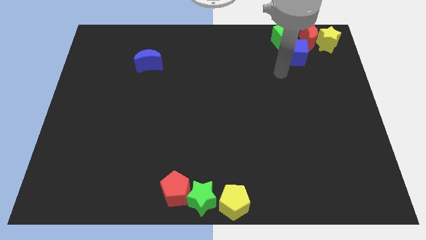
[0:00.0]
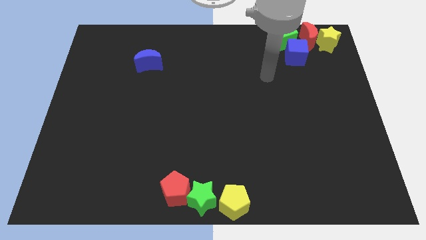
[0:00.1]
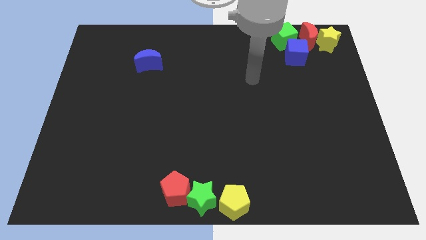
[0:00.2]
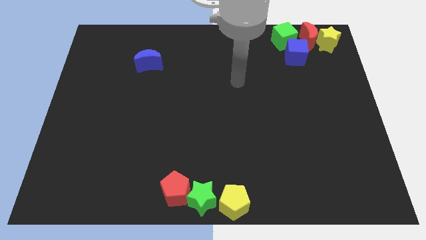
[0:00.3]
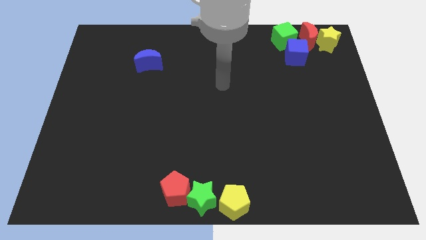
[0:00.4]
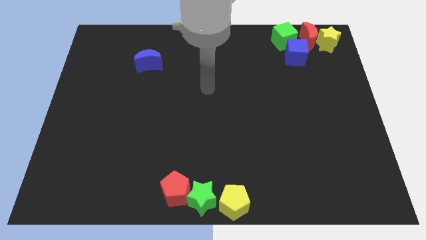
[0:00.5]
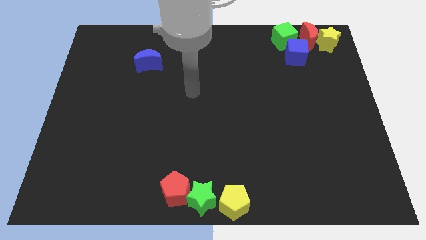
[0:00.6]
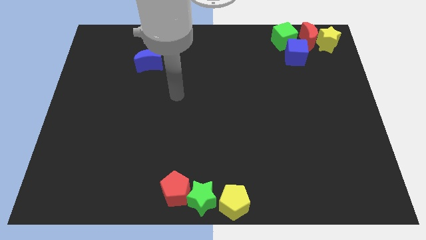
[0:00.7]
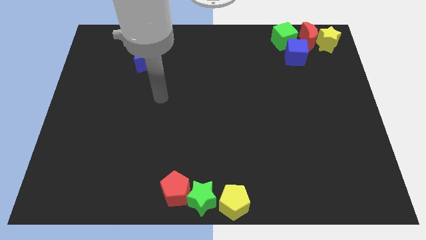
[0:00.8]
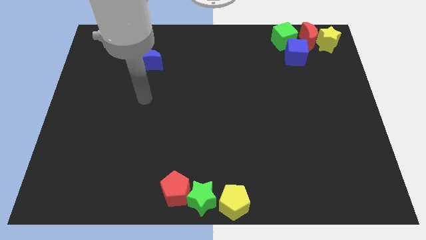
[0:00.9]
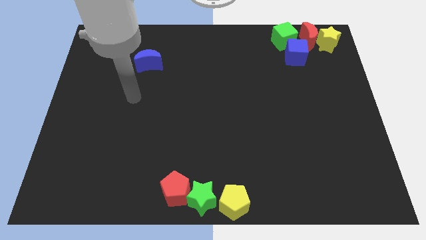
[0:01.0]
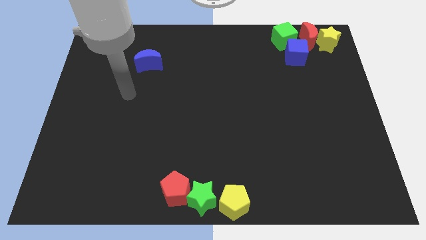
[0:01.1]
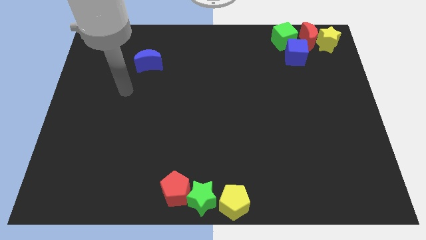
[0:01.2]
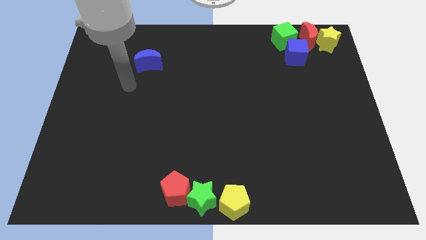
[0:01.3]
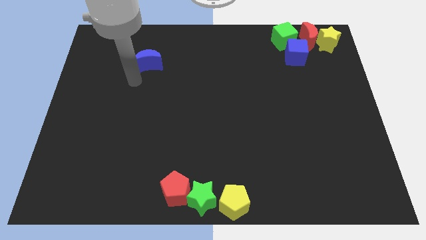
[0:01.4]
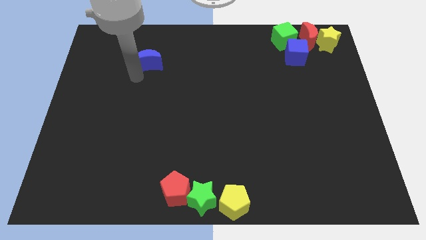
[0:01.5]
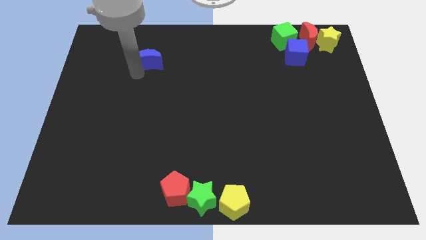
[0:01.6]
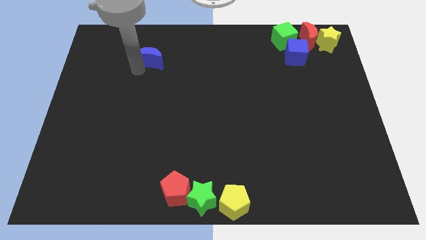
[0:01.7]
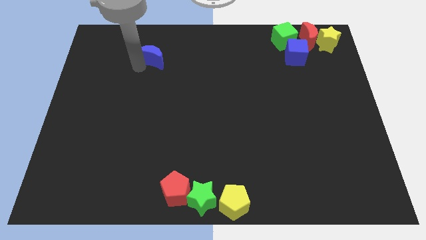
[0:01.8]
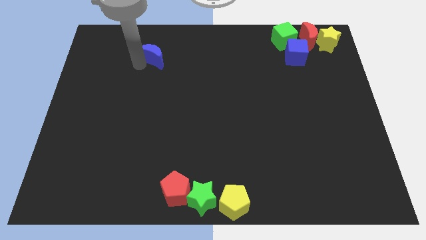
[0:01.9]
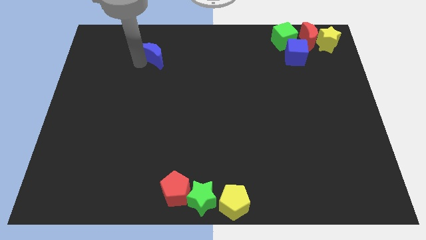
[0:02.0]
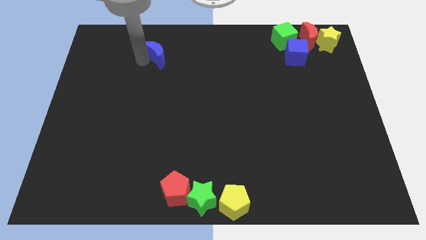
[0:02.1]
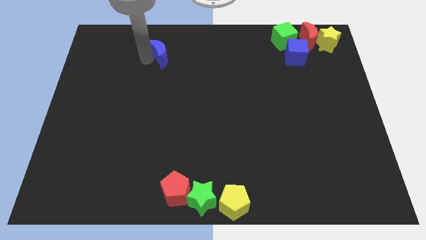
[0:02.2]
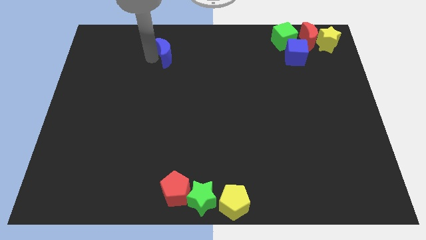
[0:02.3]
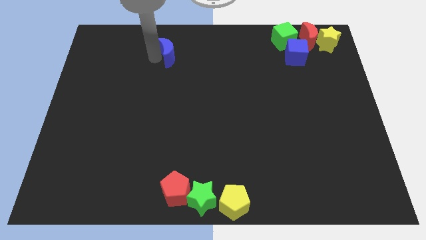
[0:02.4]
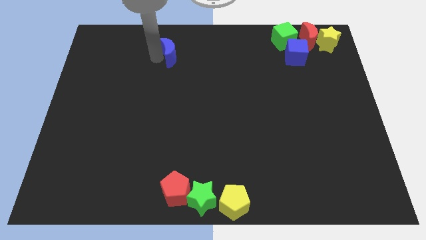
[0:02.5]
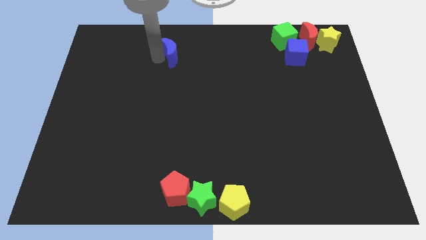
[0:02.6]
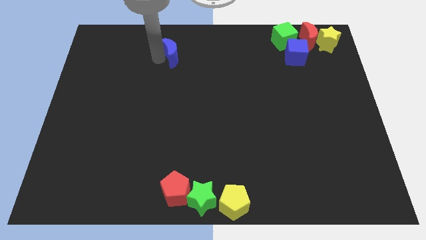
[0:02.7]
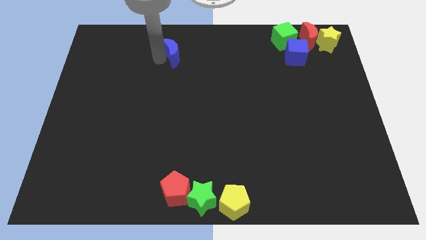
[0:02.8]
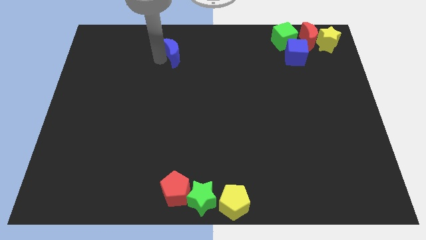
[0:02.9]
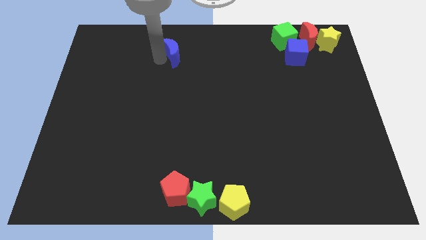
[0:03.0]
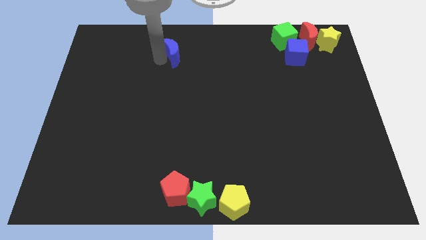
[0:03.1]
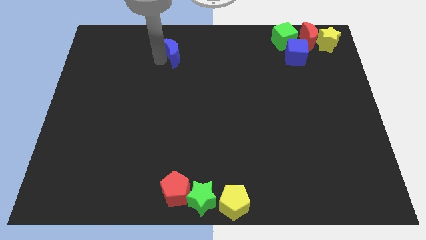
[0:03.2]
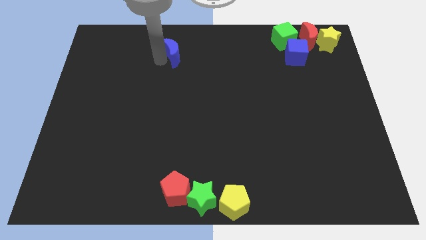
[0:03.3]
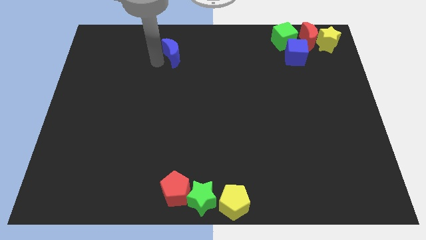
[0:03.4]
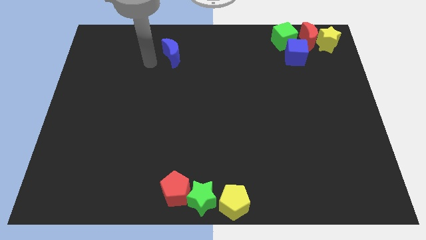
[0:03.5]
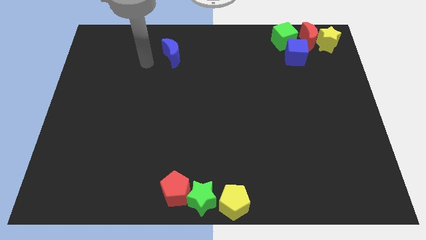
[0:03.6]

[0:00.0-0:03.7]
move your arm away from the blue cube

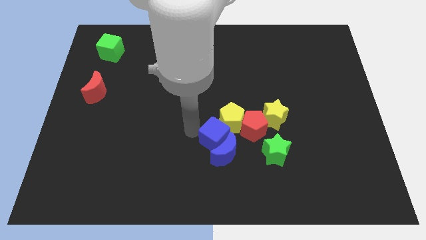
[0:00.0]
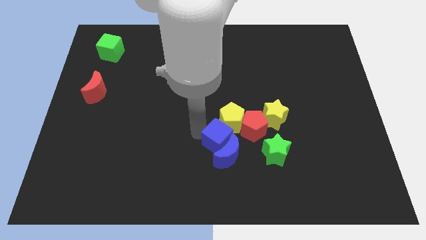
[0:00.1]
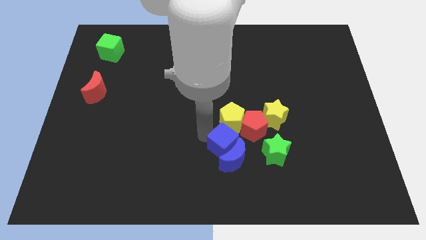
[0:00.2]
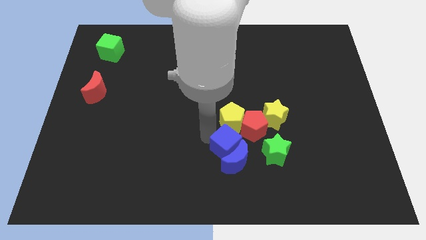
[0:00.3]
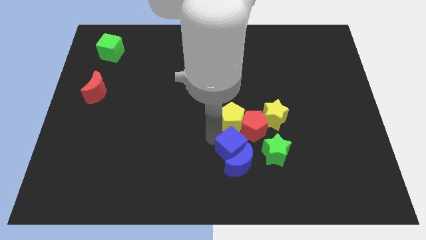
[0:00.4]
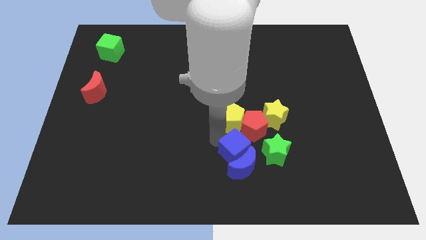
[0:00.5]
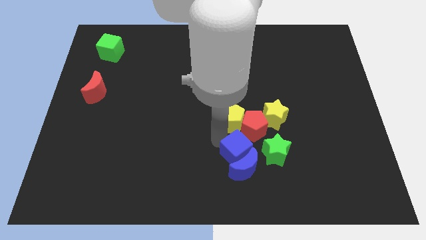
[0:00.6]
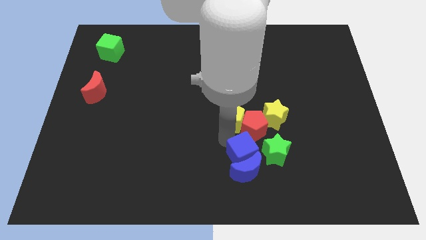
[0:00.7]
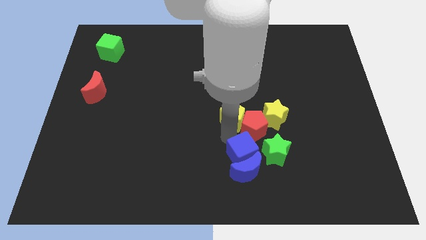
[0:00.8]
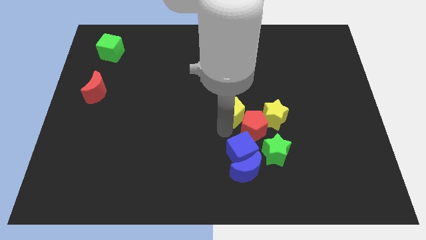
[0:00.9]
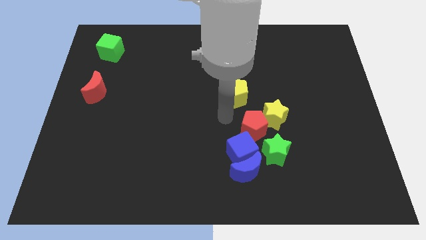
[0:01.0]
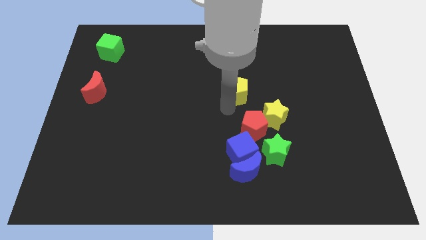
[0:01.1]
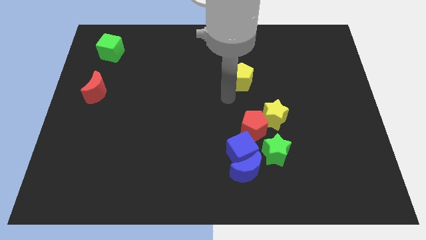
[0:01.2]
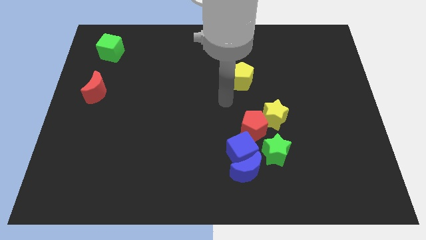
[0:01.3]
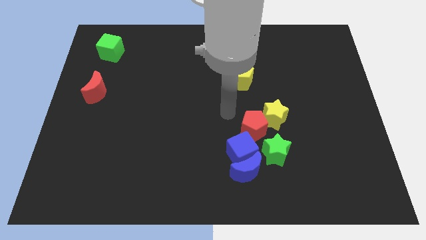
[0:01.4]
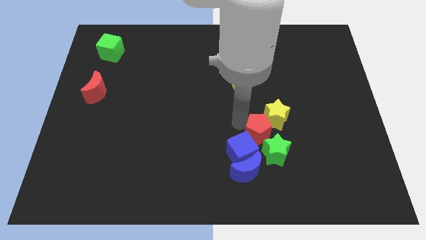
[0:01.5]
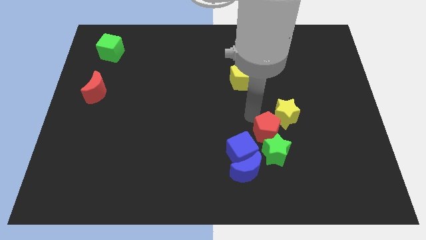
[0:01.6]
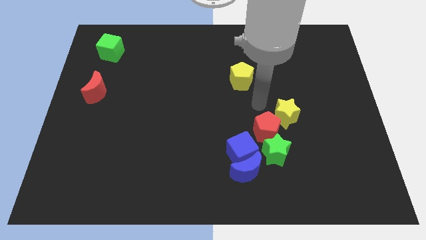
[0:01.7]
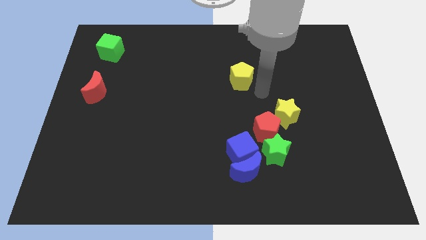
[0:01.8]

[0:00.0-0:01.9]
push blue blocks towards green star

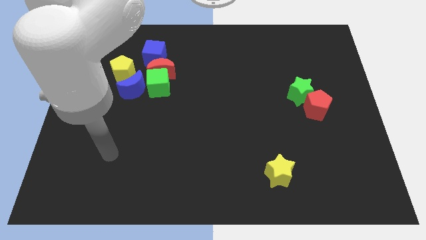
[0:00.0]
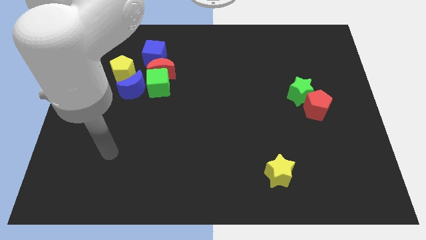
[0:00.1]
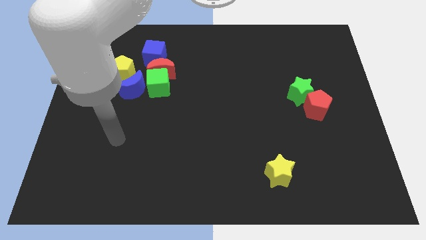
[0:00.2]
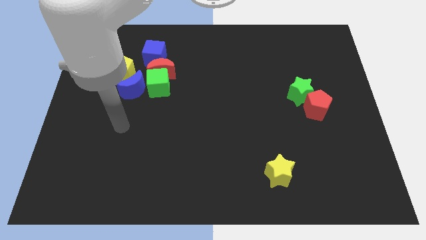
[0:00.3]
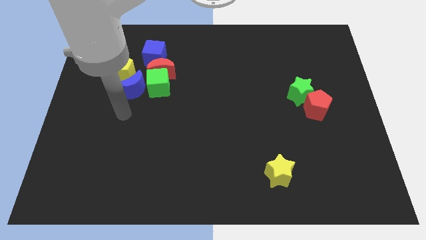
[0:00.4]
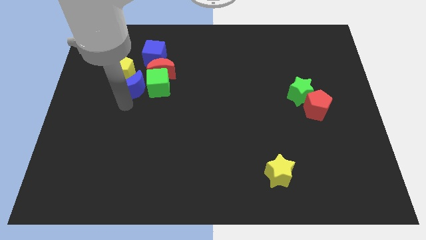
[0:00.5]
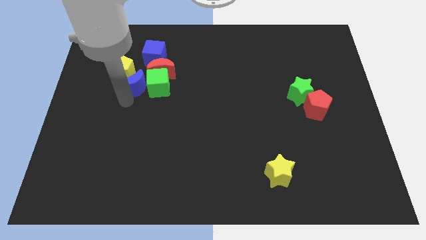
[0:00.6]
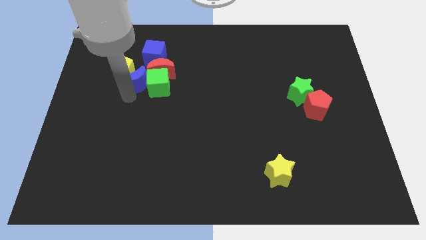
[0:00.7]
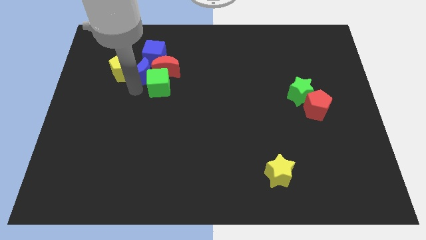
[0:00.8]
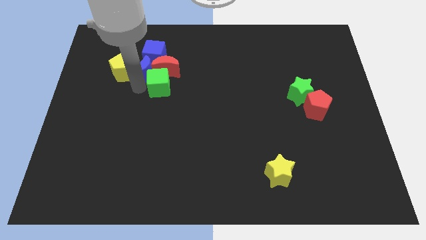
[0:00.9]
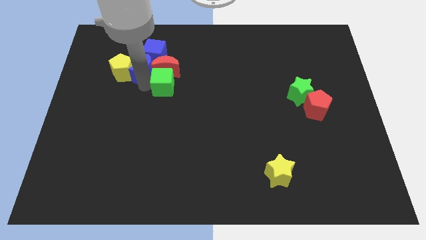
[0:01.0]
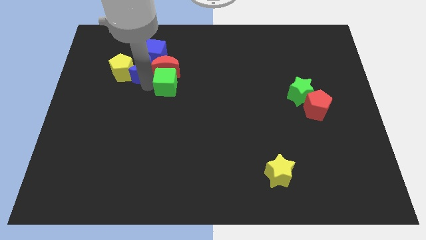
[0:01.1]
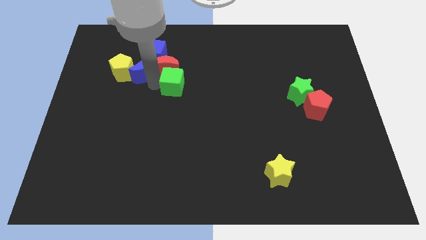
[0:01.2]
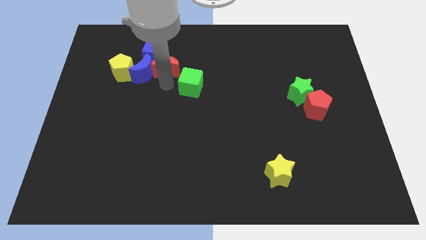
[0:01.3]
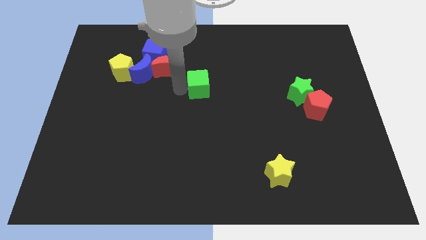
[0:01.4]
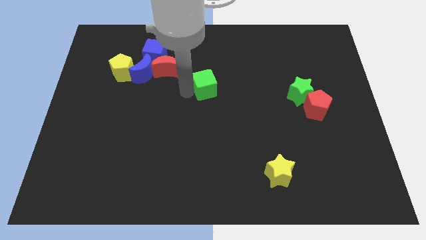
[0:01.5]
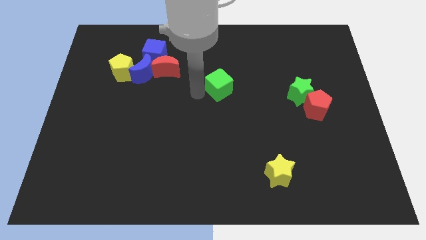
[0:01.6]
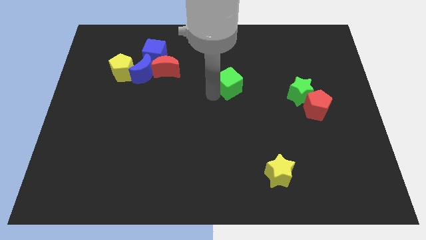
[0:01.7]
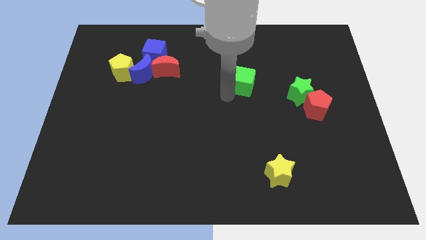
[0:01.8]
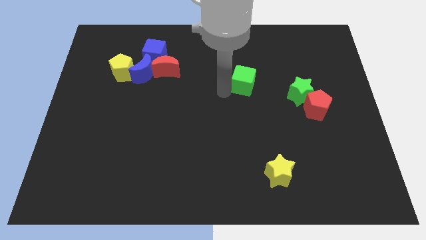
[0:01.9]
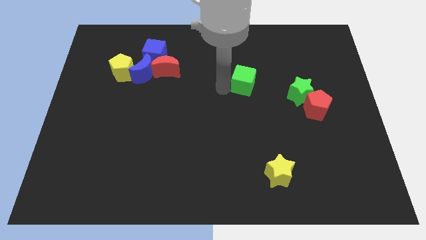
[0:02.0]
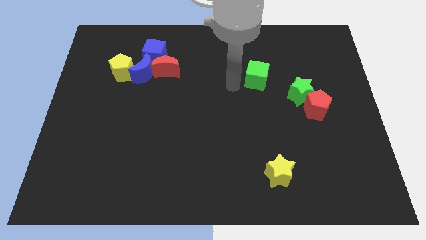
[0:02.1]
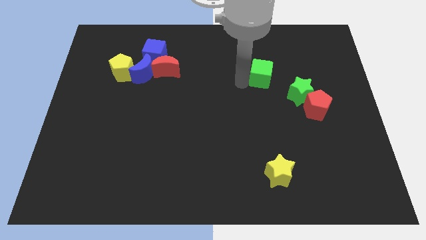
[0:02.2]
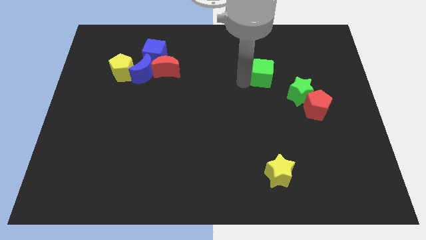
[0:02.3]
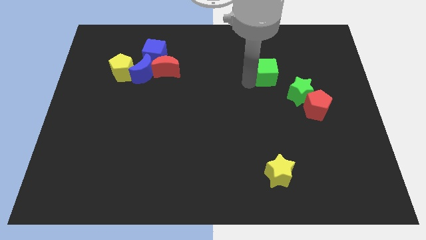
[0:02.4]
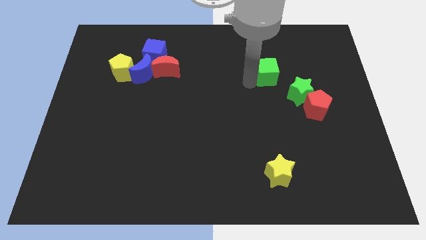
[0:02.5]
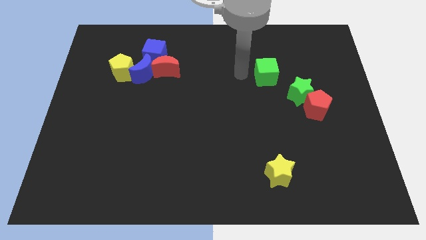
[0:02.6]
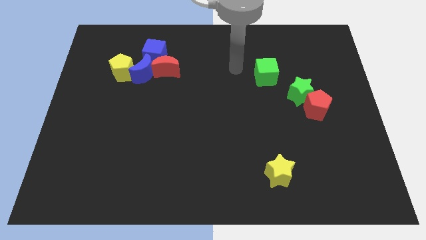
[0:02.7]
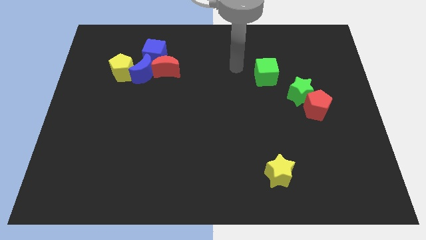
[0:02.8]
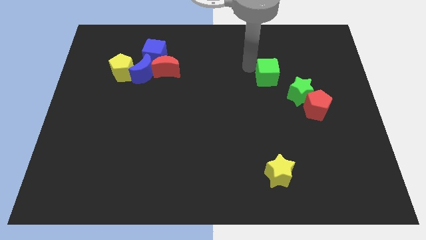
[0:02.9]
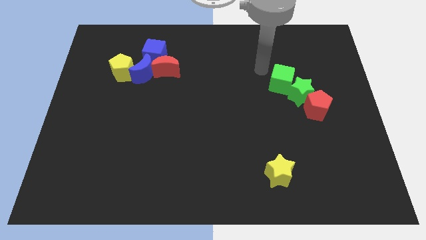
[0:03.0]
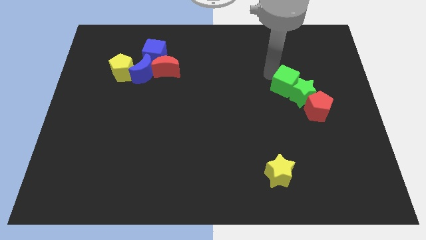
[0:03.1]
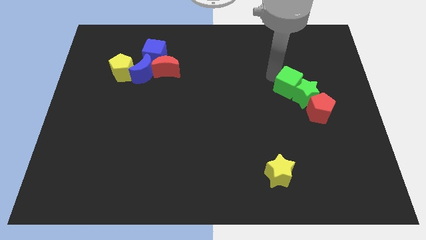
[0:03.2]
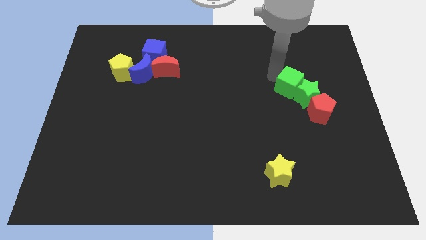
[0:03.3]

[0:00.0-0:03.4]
push green cube into green star
